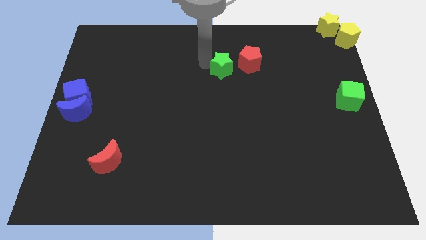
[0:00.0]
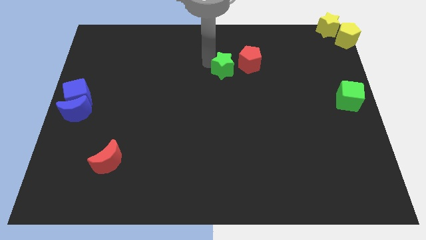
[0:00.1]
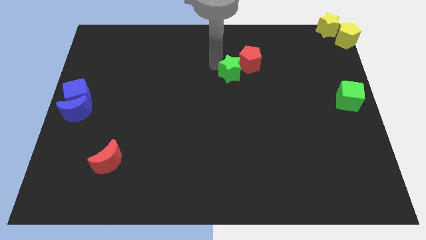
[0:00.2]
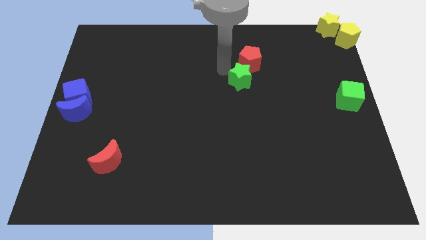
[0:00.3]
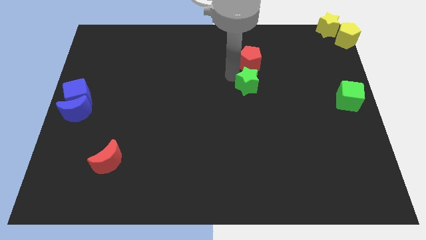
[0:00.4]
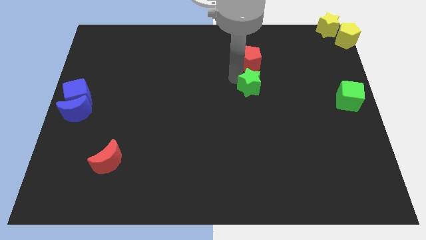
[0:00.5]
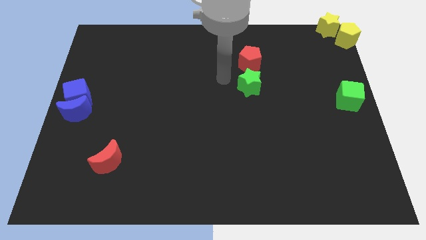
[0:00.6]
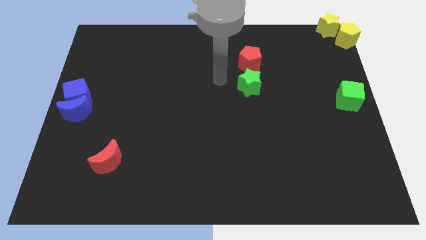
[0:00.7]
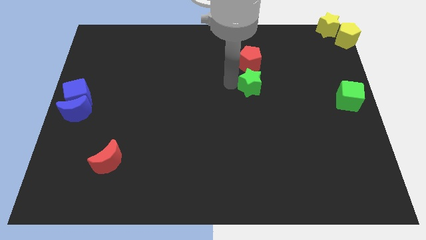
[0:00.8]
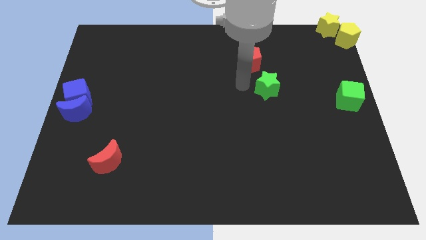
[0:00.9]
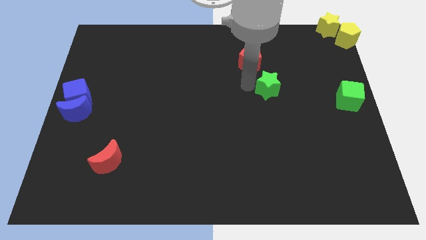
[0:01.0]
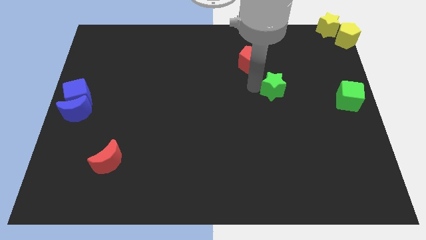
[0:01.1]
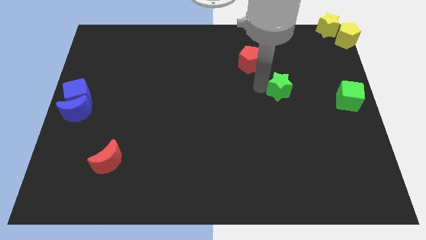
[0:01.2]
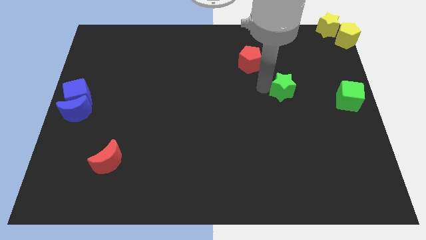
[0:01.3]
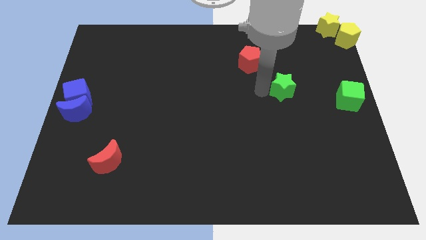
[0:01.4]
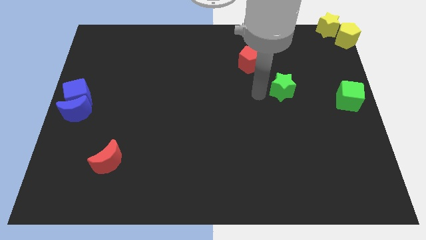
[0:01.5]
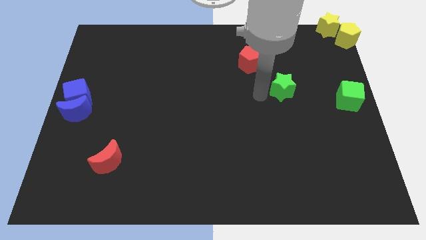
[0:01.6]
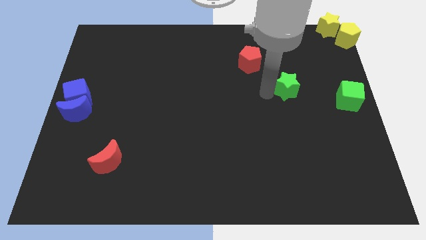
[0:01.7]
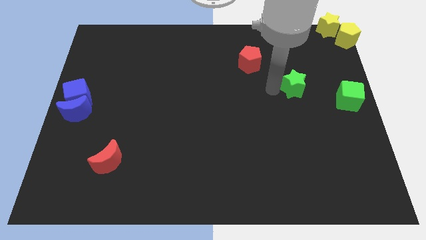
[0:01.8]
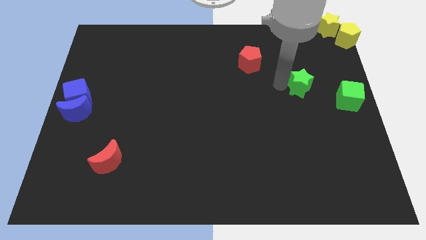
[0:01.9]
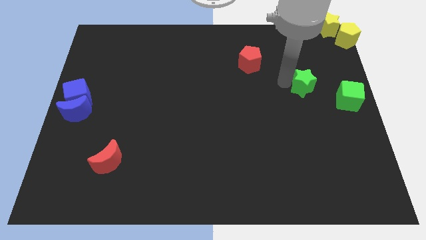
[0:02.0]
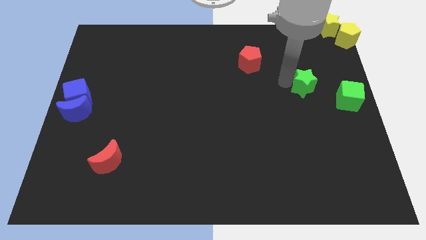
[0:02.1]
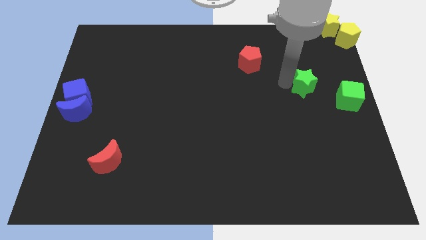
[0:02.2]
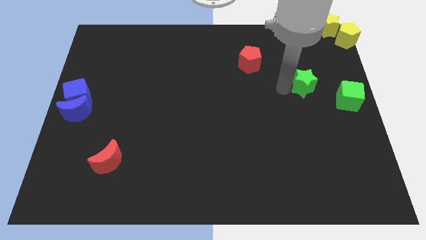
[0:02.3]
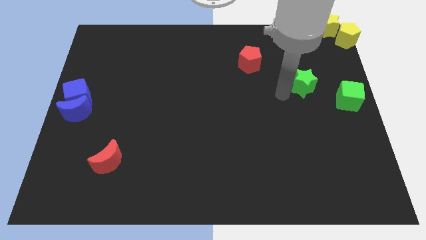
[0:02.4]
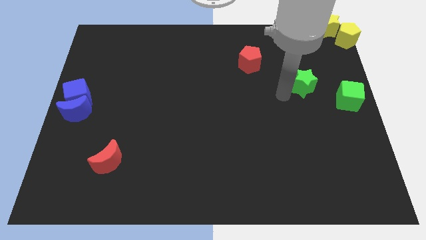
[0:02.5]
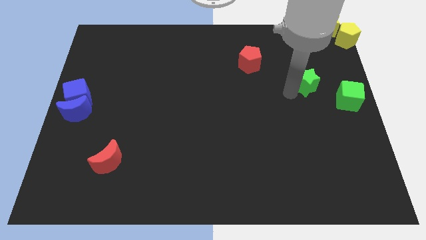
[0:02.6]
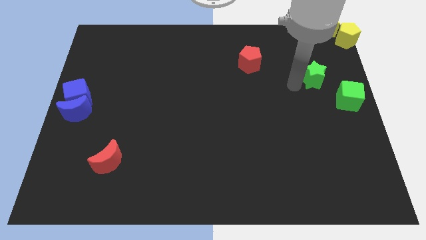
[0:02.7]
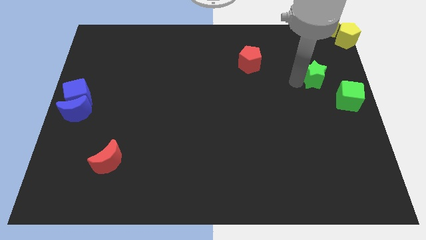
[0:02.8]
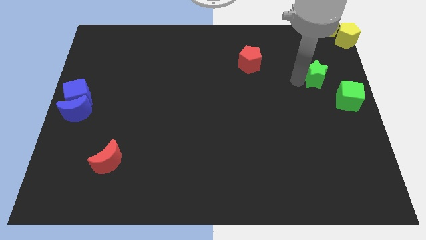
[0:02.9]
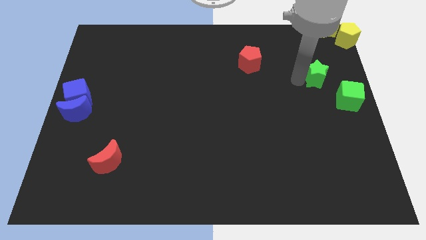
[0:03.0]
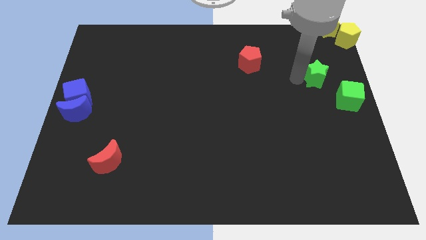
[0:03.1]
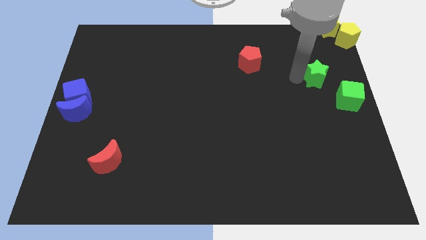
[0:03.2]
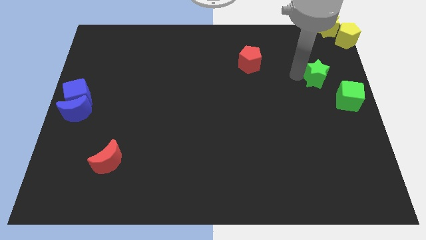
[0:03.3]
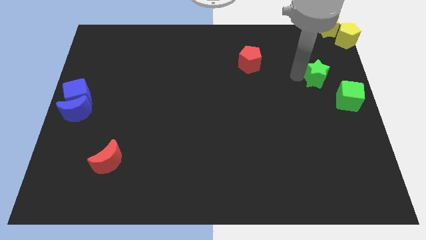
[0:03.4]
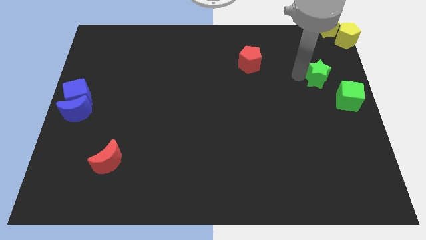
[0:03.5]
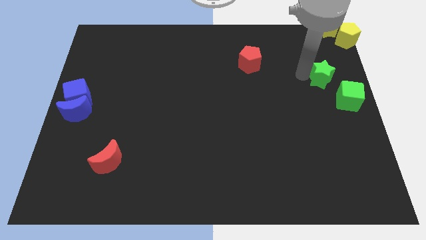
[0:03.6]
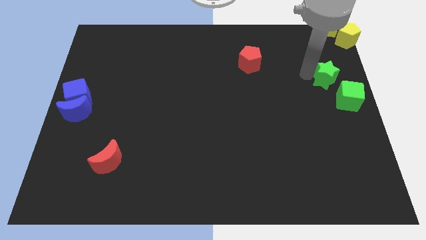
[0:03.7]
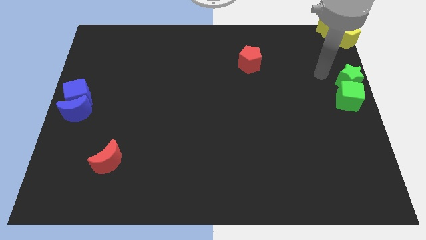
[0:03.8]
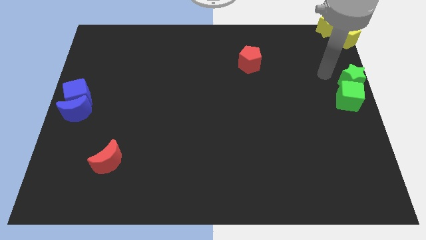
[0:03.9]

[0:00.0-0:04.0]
place the green star on top of the green cube

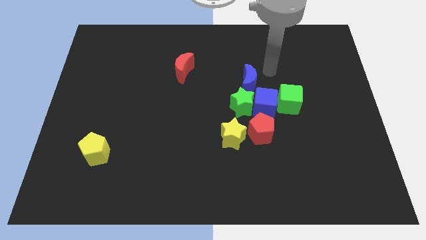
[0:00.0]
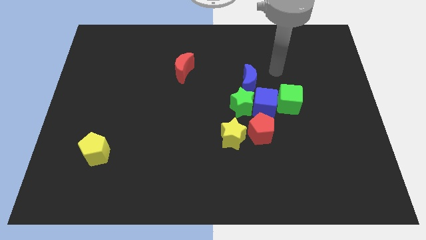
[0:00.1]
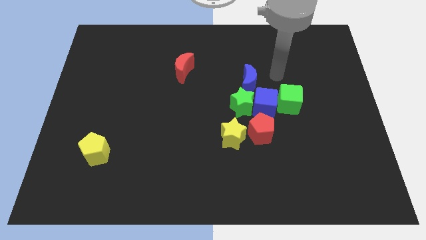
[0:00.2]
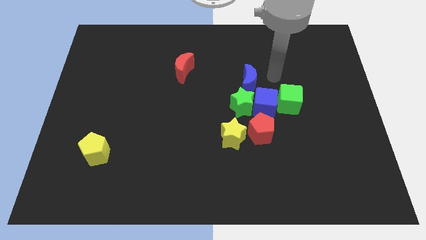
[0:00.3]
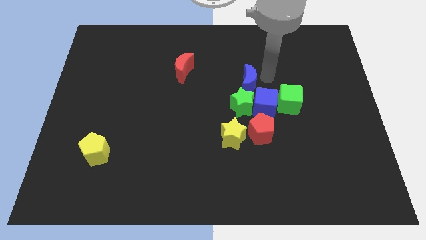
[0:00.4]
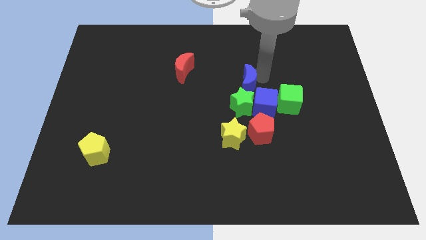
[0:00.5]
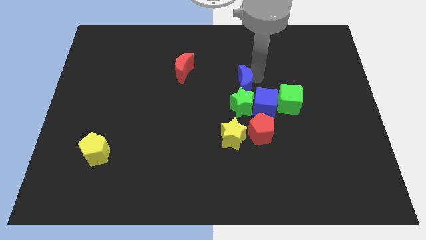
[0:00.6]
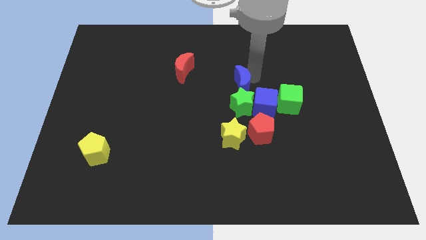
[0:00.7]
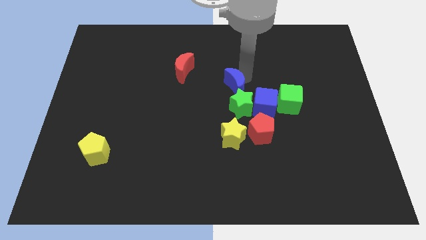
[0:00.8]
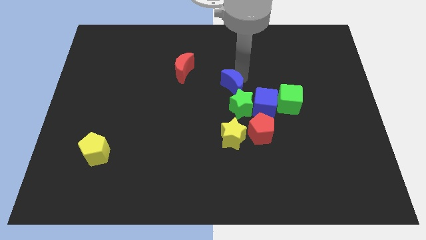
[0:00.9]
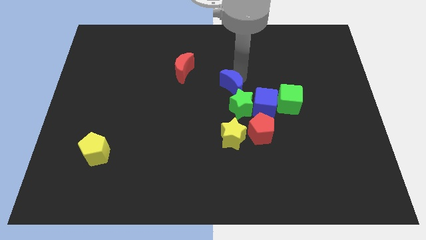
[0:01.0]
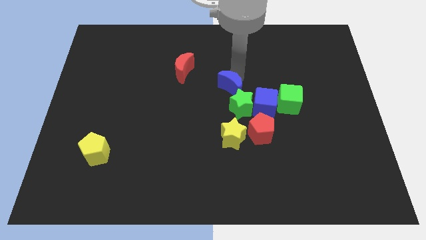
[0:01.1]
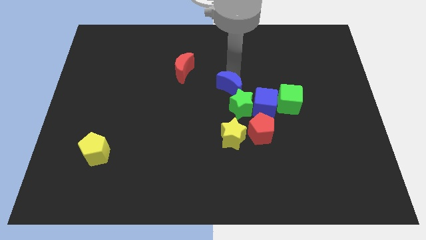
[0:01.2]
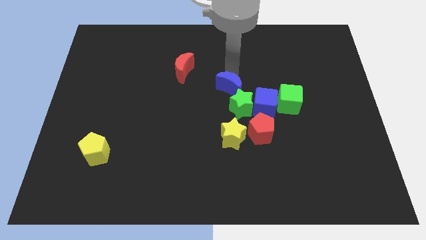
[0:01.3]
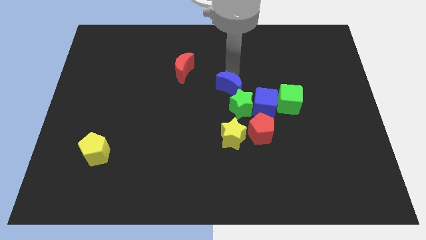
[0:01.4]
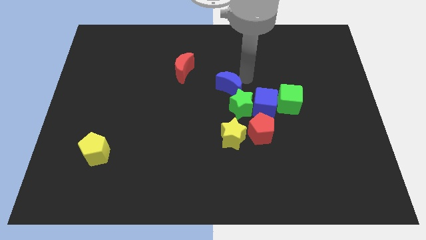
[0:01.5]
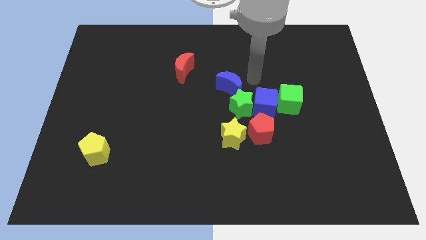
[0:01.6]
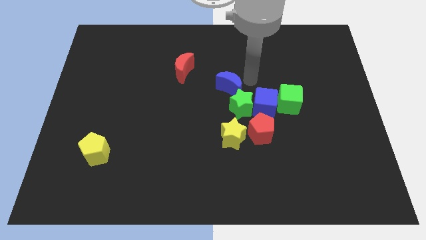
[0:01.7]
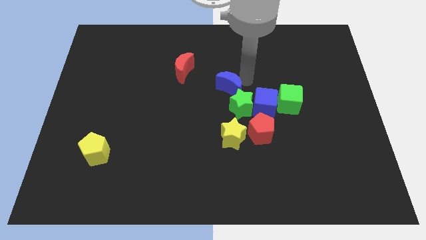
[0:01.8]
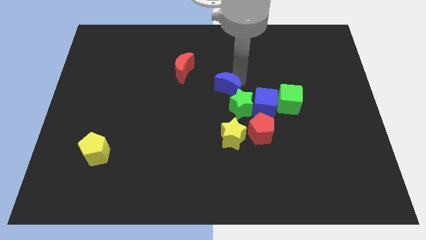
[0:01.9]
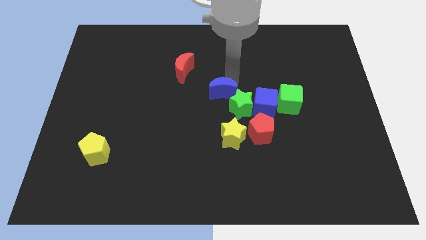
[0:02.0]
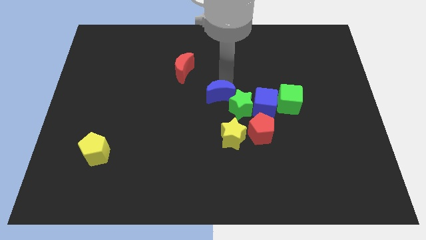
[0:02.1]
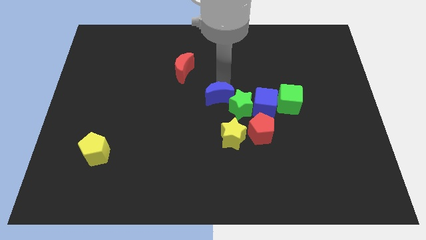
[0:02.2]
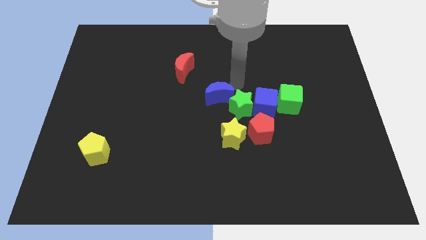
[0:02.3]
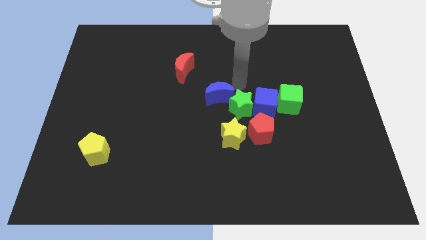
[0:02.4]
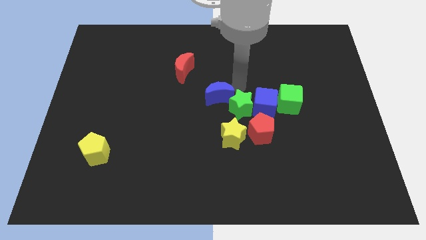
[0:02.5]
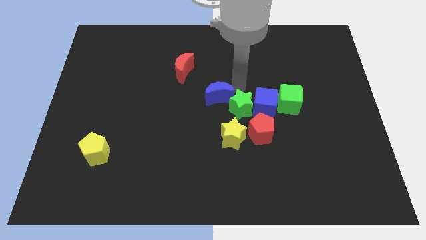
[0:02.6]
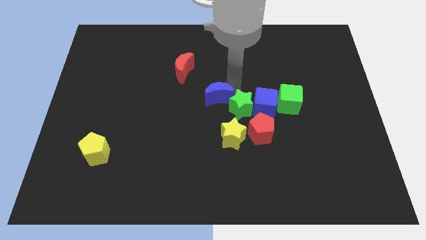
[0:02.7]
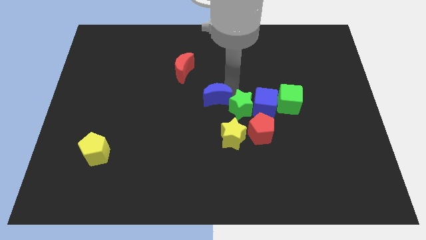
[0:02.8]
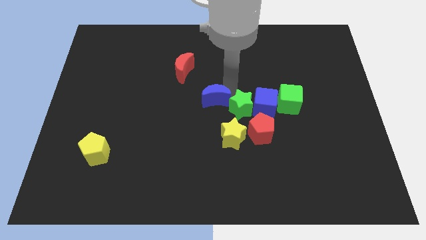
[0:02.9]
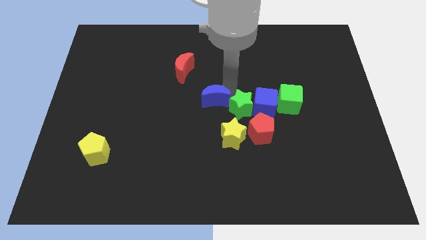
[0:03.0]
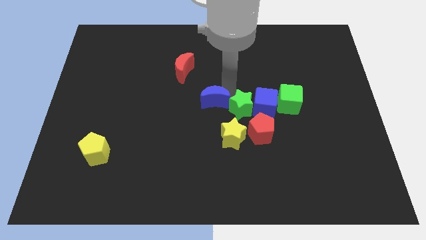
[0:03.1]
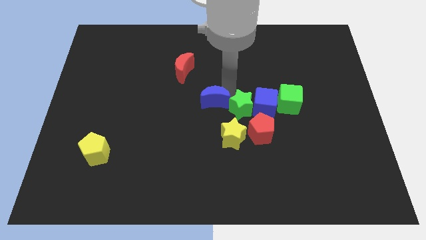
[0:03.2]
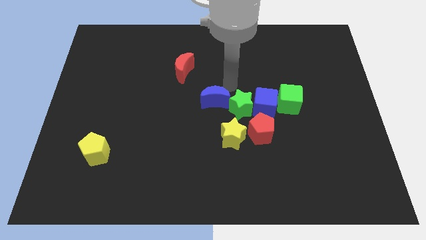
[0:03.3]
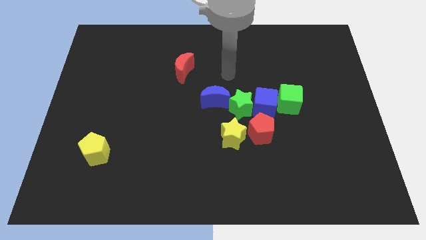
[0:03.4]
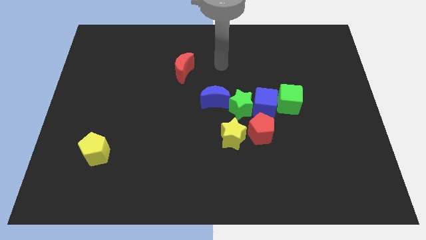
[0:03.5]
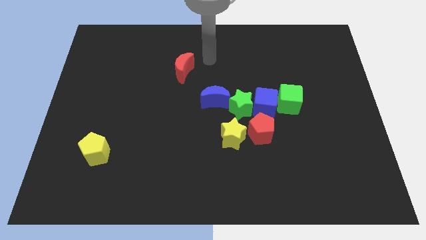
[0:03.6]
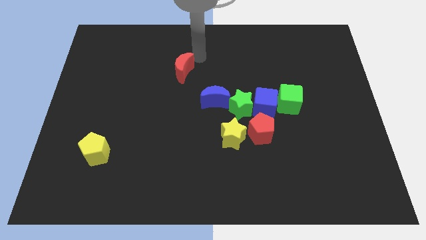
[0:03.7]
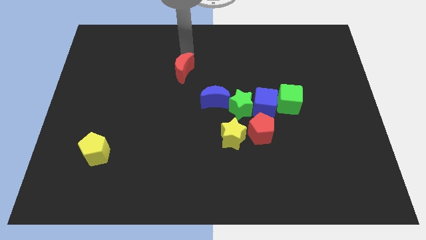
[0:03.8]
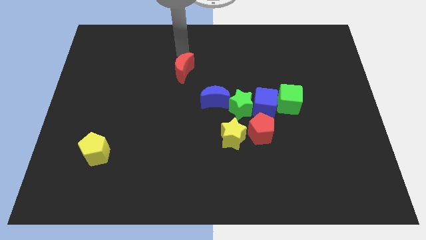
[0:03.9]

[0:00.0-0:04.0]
move blue moon to the left of green star

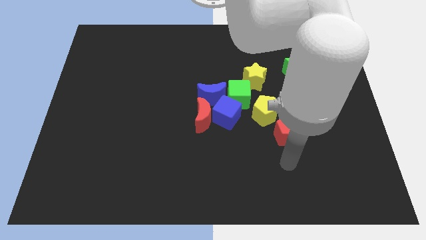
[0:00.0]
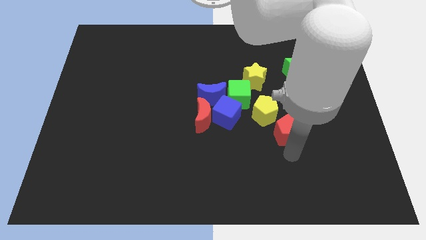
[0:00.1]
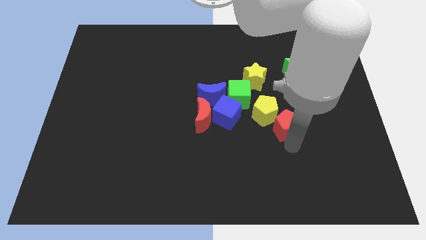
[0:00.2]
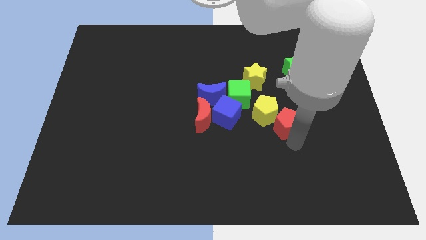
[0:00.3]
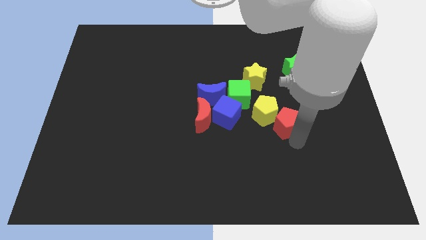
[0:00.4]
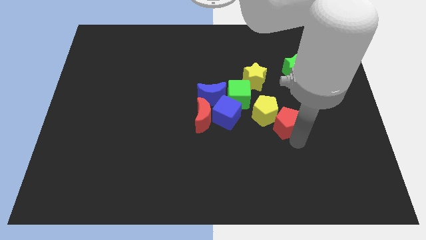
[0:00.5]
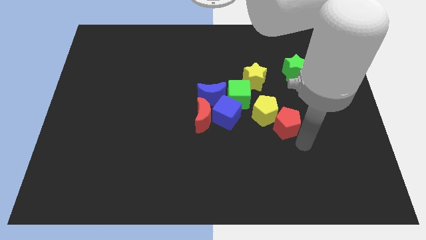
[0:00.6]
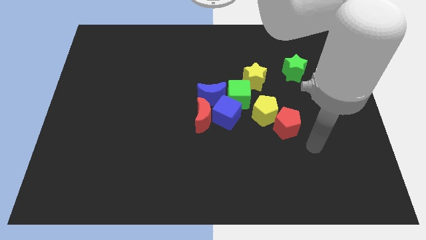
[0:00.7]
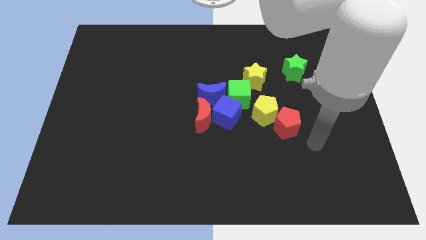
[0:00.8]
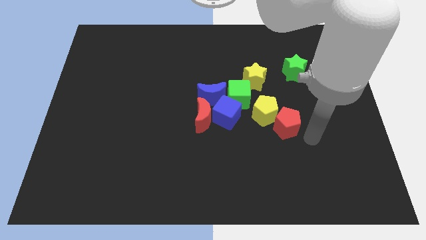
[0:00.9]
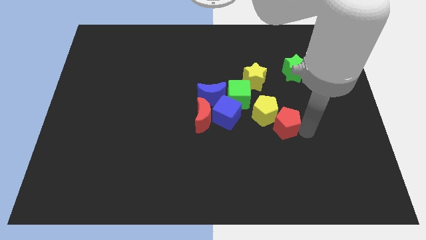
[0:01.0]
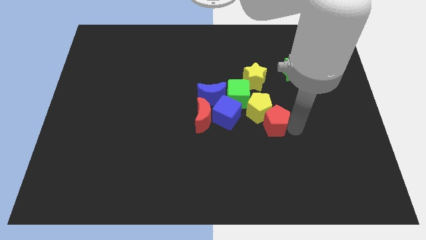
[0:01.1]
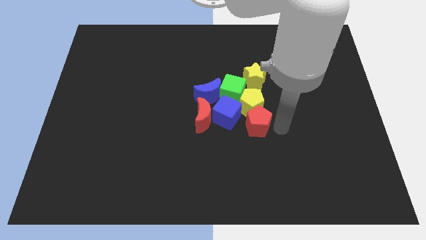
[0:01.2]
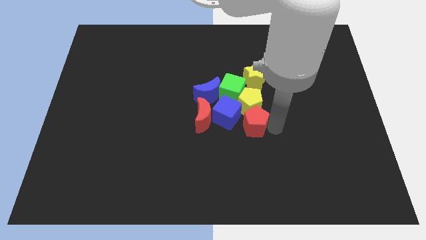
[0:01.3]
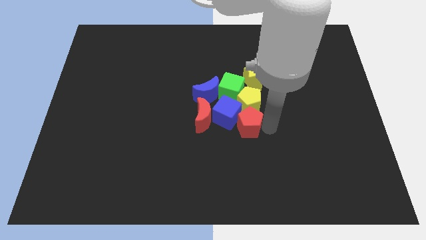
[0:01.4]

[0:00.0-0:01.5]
push the red pentagon into the yellow pentagon
